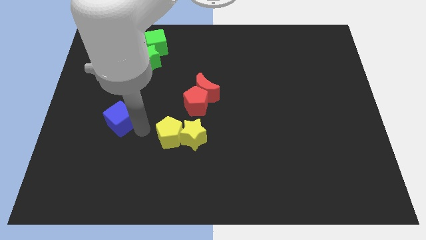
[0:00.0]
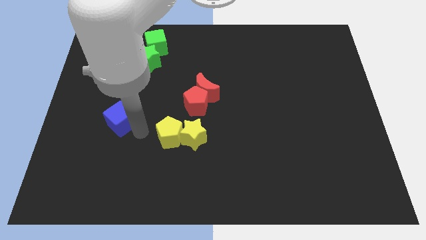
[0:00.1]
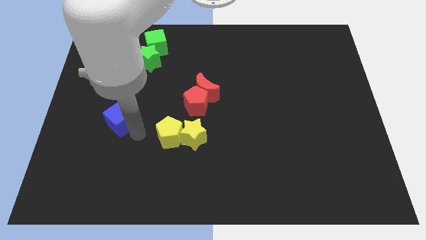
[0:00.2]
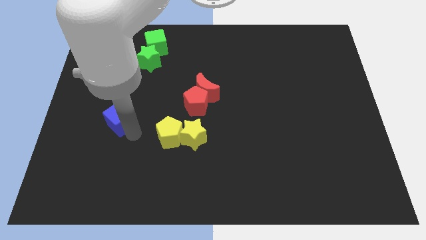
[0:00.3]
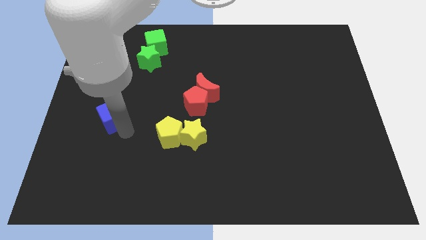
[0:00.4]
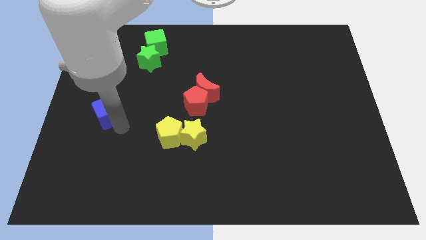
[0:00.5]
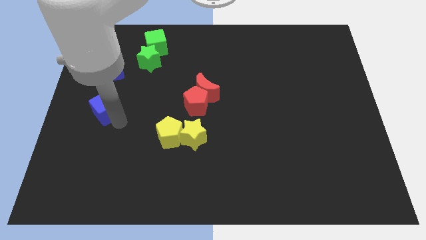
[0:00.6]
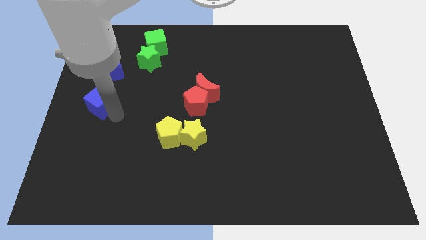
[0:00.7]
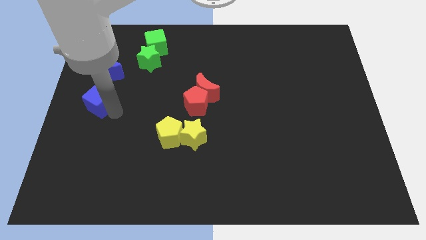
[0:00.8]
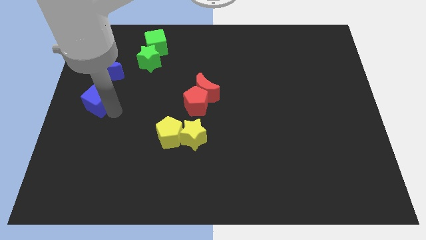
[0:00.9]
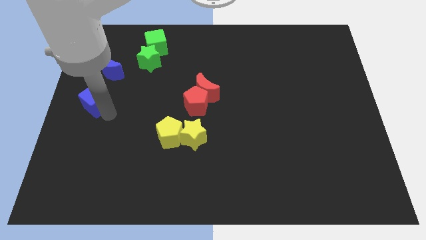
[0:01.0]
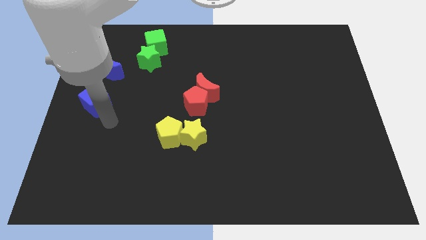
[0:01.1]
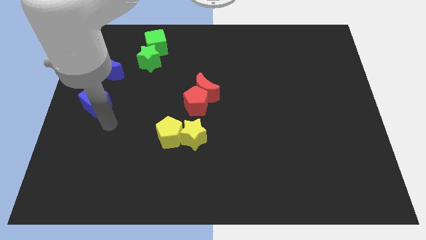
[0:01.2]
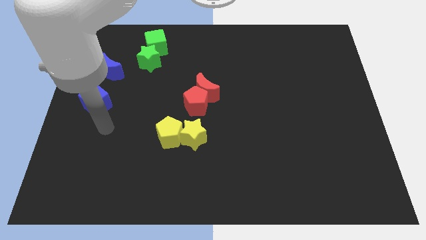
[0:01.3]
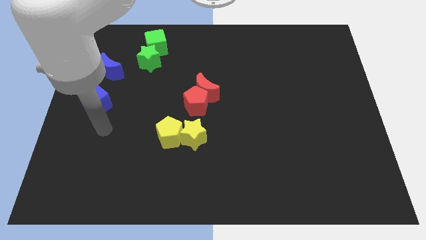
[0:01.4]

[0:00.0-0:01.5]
move the blue cube towards the top side

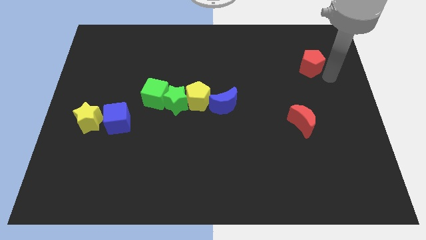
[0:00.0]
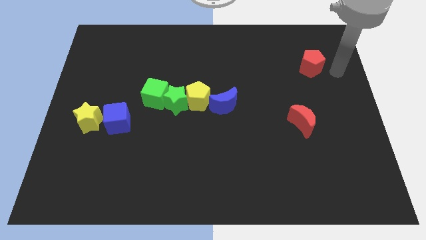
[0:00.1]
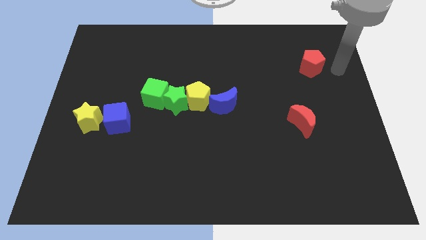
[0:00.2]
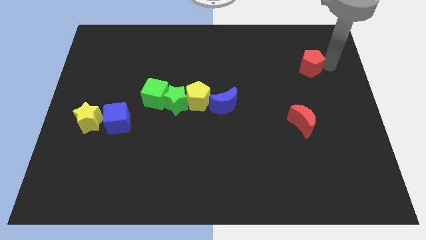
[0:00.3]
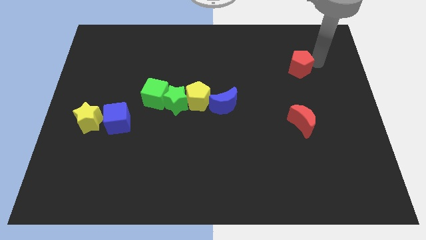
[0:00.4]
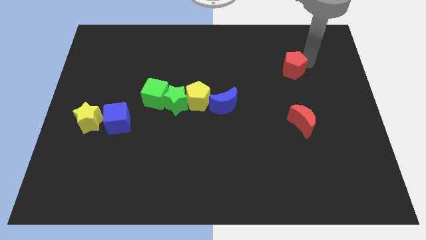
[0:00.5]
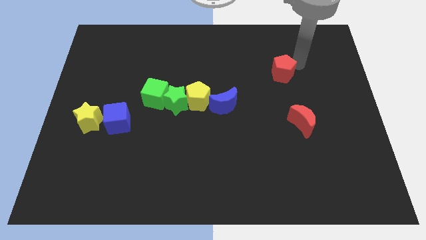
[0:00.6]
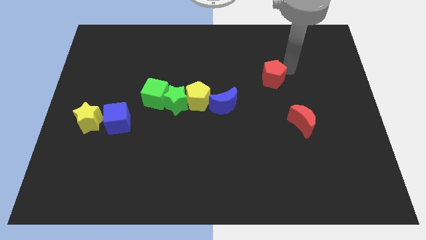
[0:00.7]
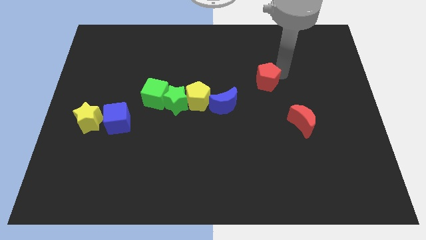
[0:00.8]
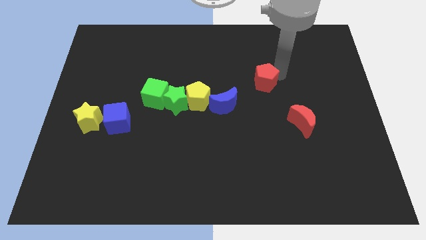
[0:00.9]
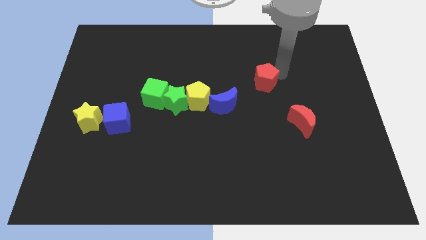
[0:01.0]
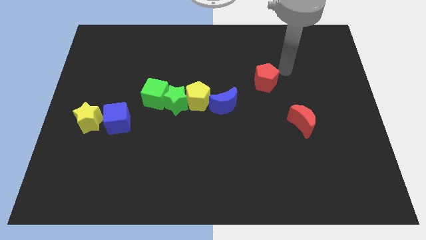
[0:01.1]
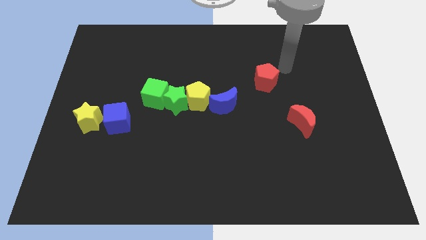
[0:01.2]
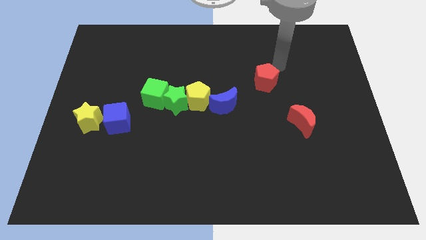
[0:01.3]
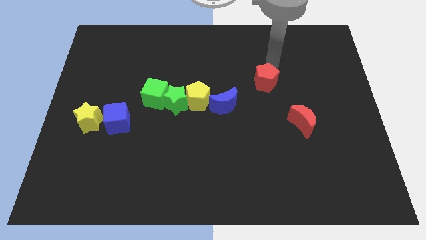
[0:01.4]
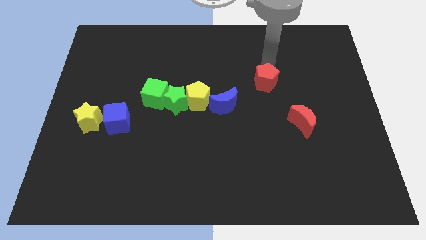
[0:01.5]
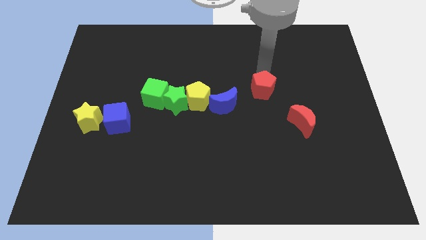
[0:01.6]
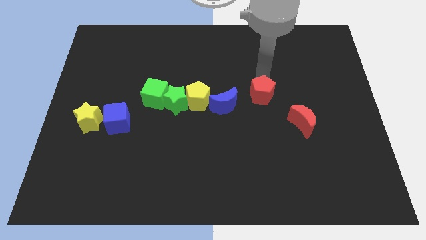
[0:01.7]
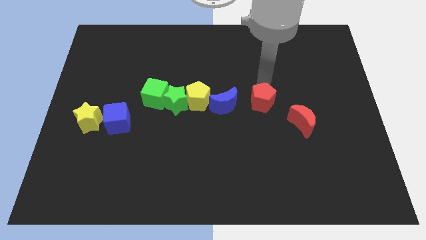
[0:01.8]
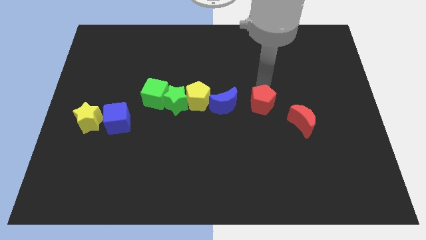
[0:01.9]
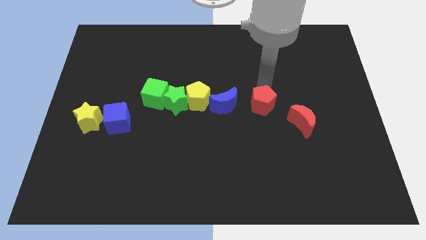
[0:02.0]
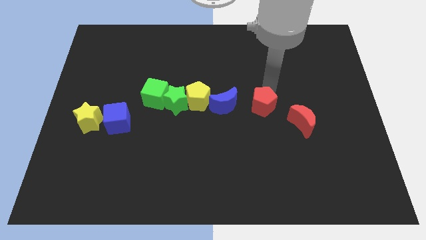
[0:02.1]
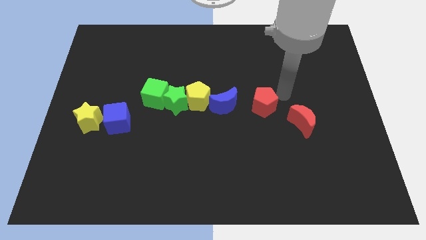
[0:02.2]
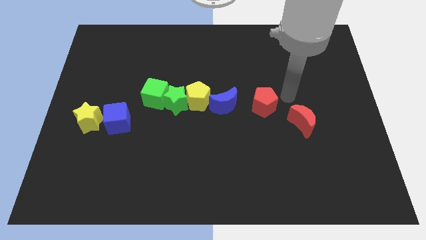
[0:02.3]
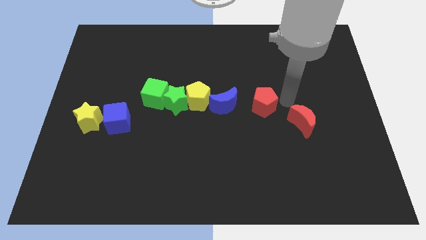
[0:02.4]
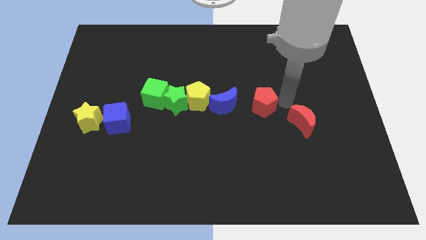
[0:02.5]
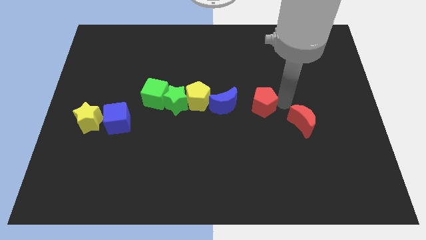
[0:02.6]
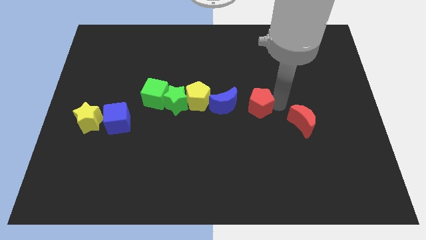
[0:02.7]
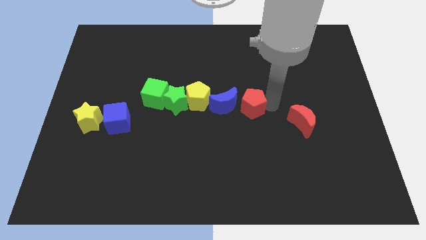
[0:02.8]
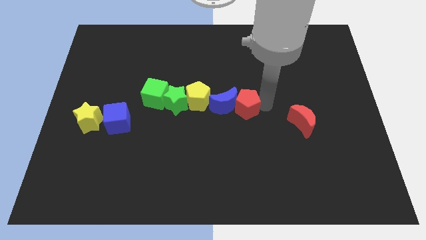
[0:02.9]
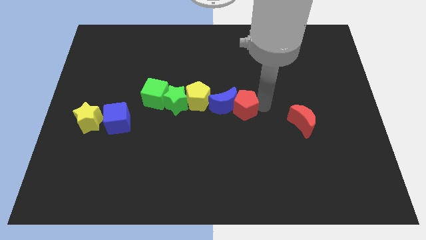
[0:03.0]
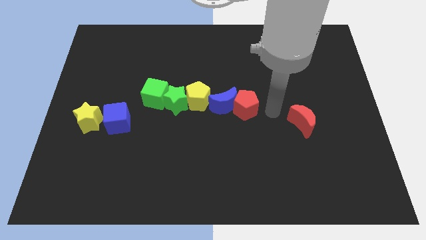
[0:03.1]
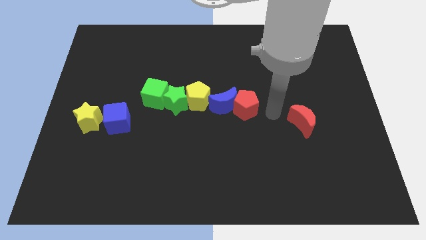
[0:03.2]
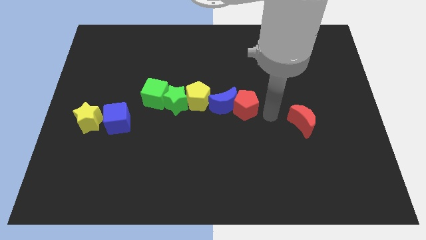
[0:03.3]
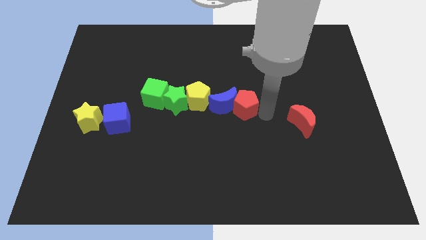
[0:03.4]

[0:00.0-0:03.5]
place red pentagon beside blue crescent

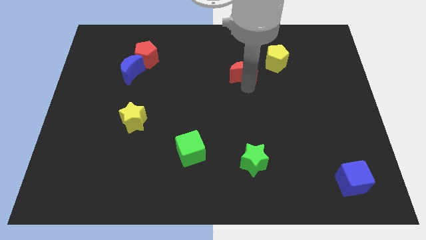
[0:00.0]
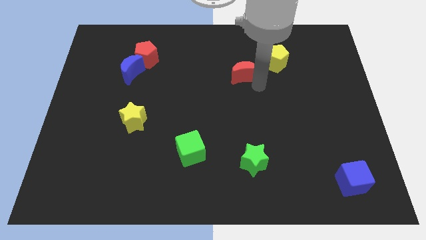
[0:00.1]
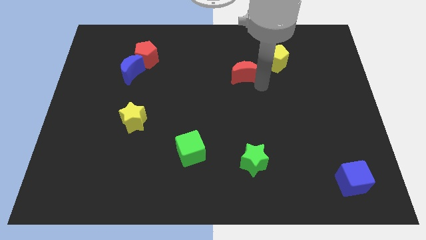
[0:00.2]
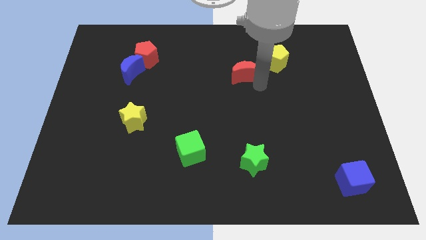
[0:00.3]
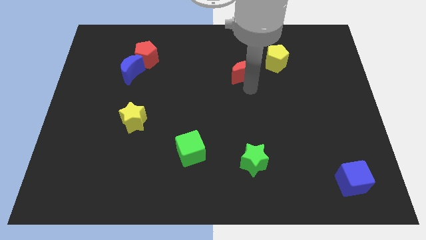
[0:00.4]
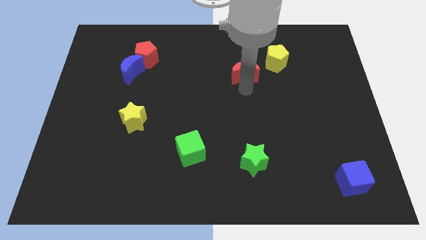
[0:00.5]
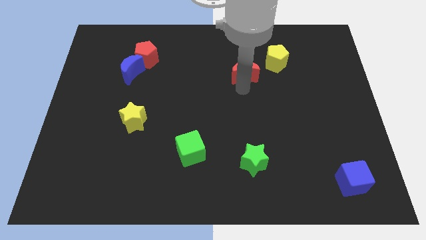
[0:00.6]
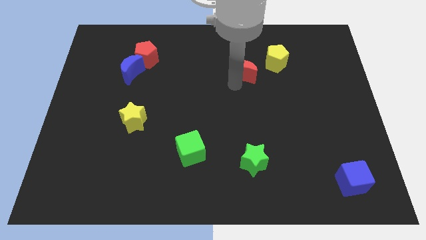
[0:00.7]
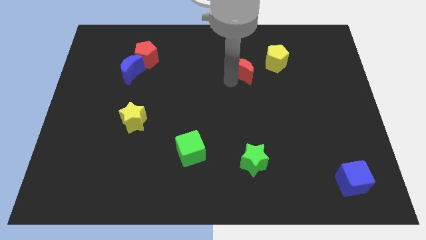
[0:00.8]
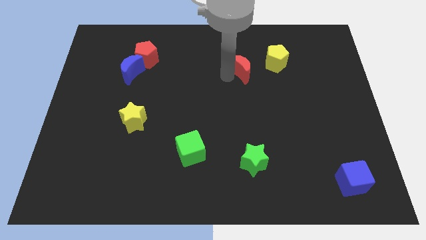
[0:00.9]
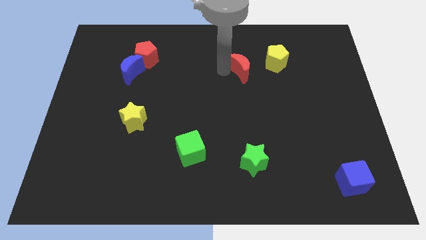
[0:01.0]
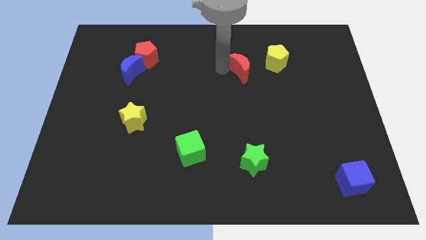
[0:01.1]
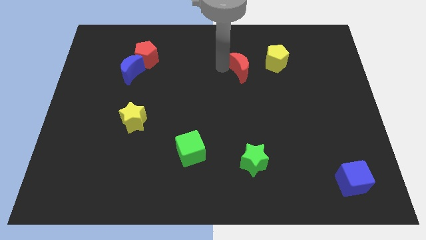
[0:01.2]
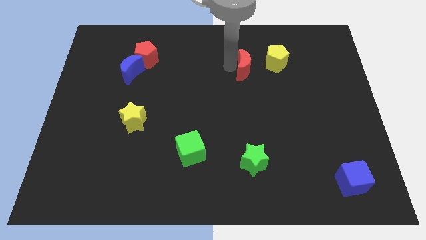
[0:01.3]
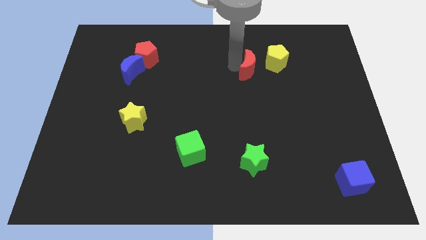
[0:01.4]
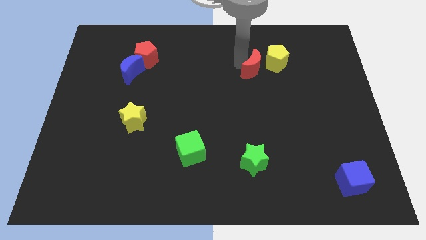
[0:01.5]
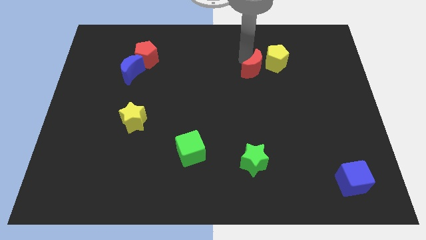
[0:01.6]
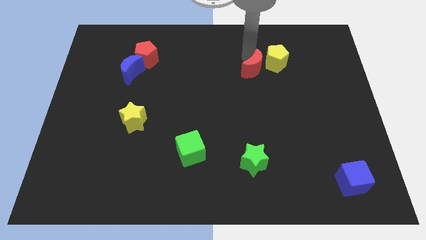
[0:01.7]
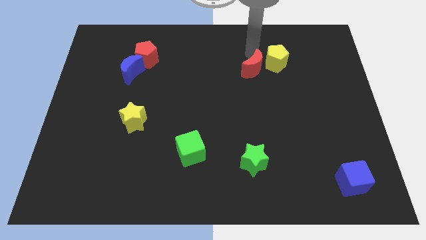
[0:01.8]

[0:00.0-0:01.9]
push red moon towards yellow pentagon

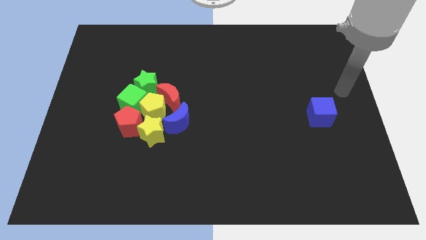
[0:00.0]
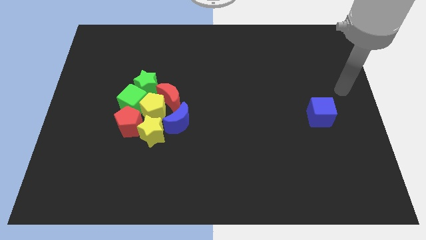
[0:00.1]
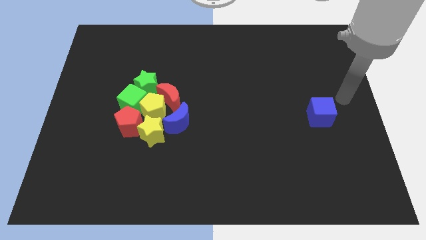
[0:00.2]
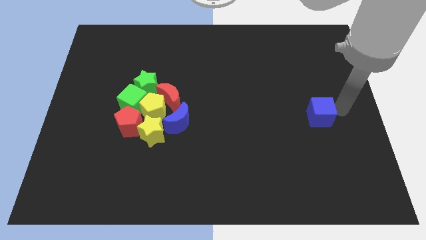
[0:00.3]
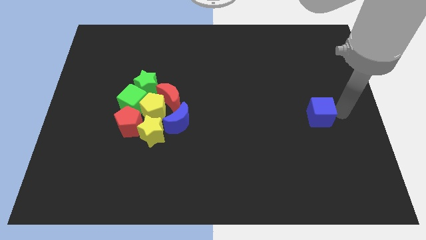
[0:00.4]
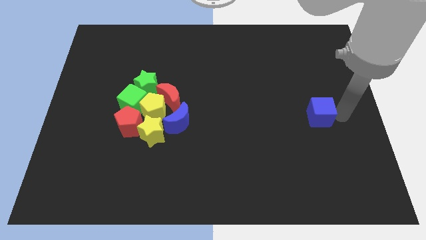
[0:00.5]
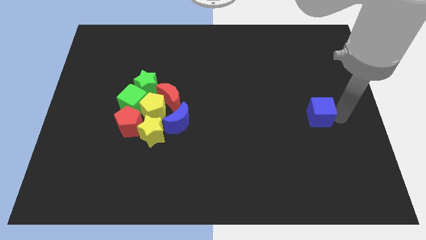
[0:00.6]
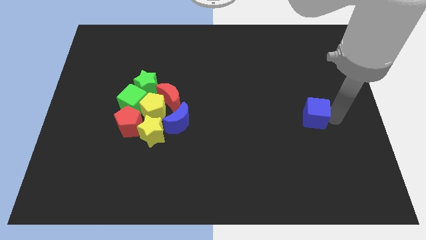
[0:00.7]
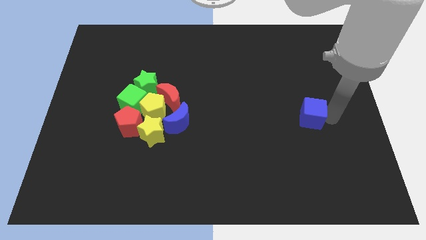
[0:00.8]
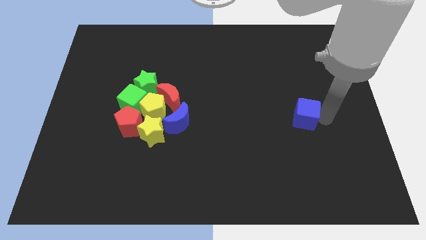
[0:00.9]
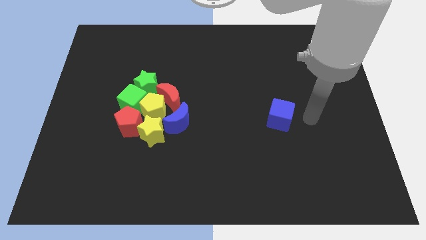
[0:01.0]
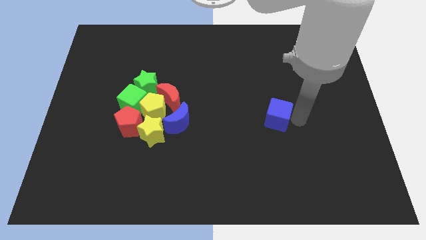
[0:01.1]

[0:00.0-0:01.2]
push the blue cube to the left of the board

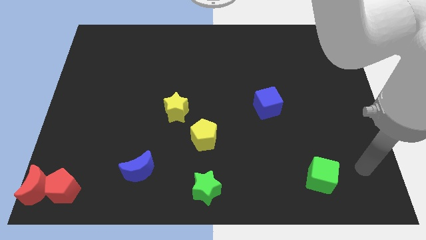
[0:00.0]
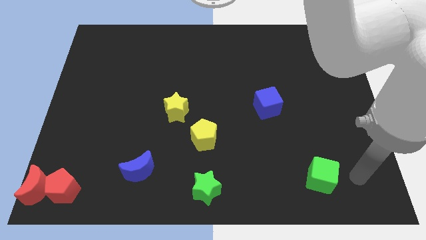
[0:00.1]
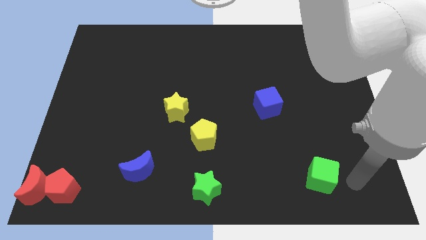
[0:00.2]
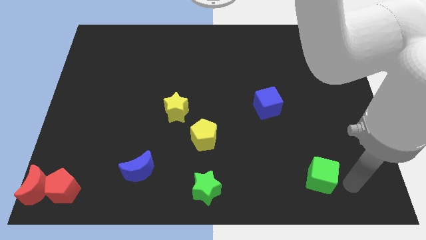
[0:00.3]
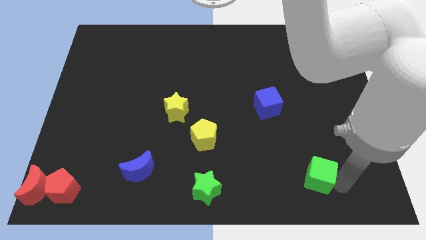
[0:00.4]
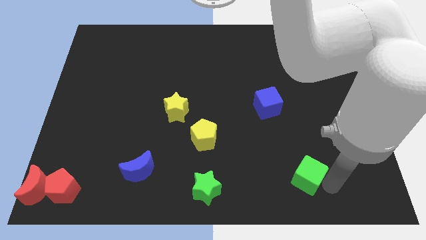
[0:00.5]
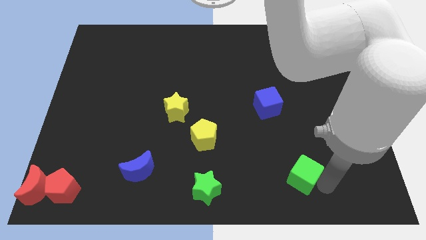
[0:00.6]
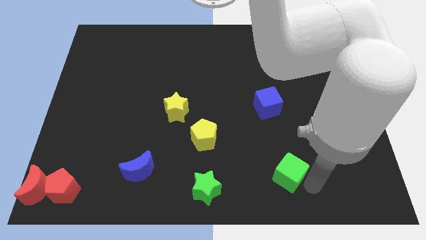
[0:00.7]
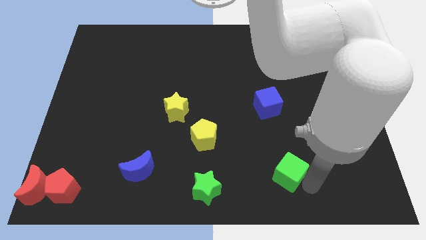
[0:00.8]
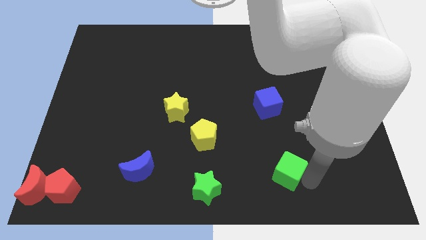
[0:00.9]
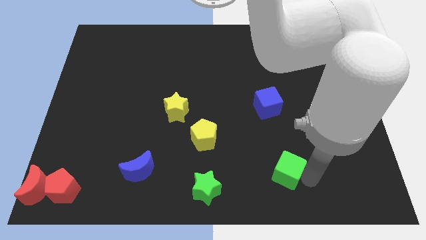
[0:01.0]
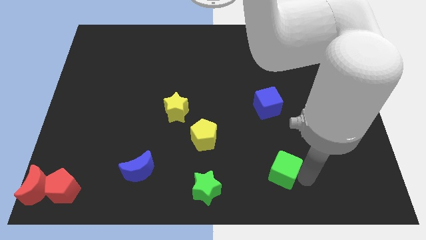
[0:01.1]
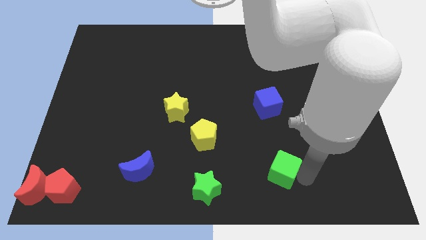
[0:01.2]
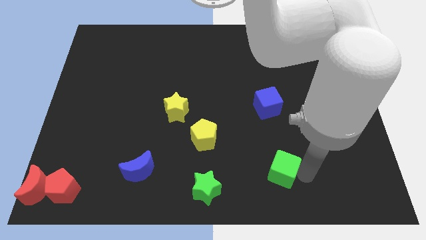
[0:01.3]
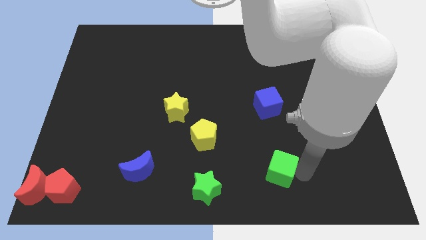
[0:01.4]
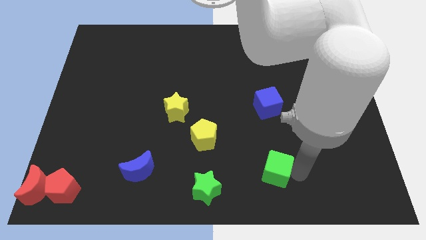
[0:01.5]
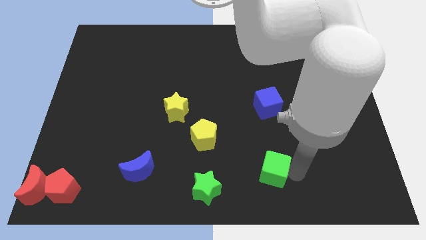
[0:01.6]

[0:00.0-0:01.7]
move the green cube towards the green star
